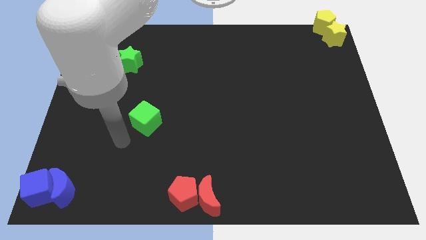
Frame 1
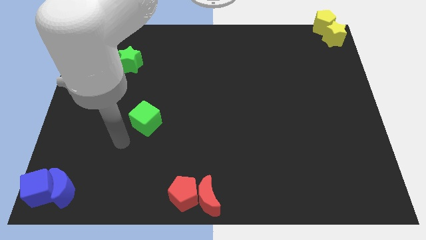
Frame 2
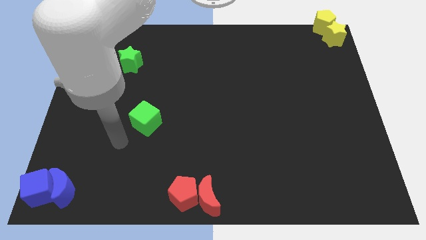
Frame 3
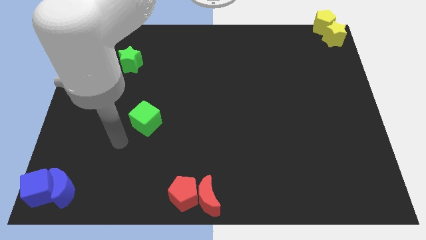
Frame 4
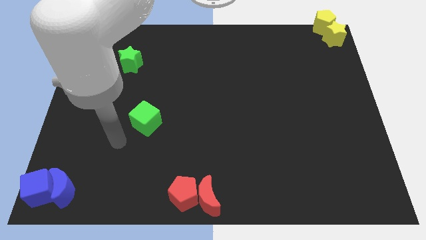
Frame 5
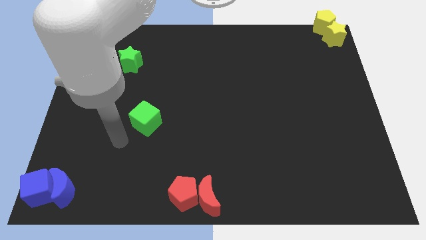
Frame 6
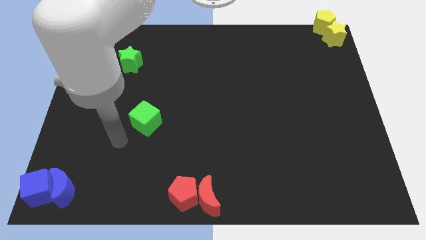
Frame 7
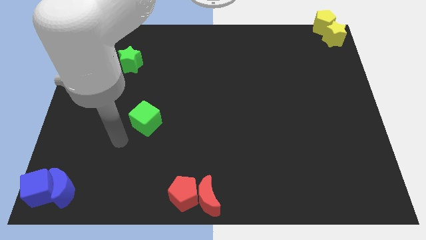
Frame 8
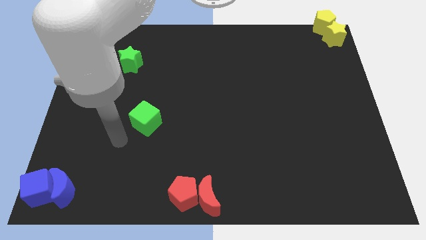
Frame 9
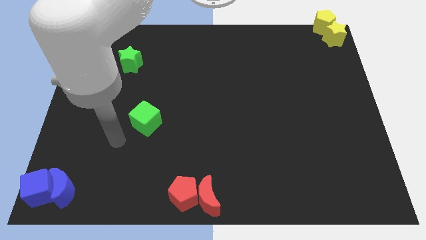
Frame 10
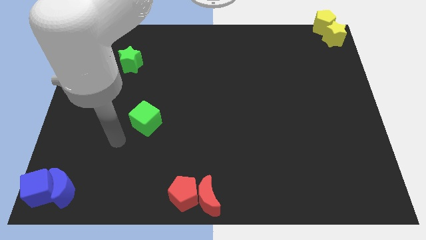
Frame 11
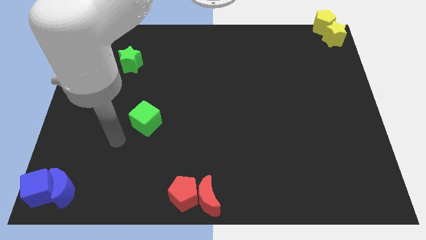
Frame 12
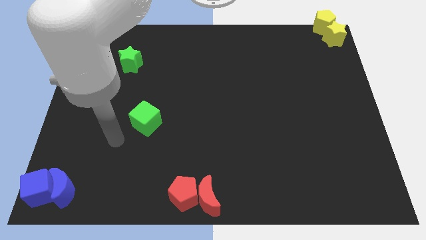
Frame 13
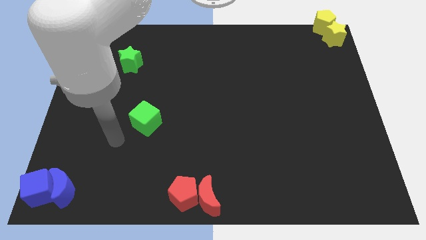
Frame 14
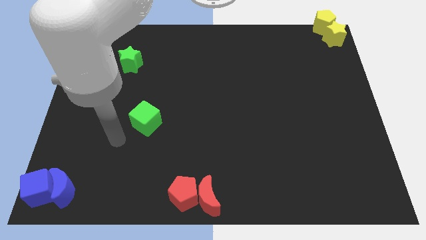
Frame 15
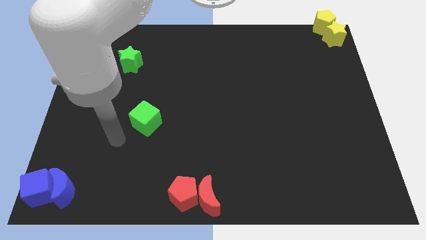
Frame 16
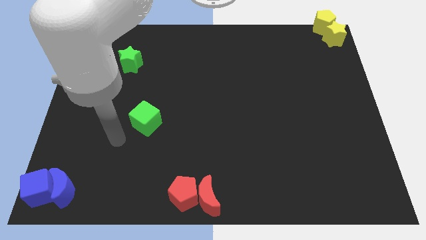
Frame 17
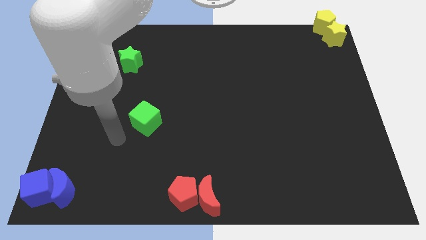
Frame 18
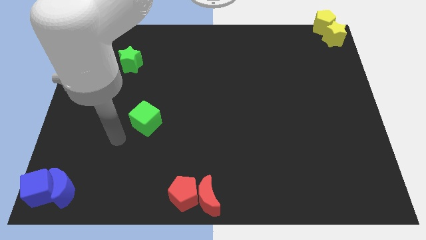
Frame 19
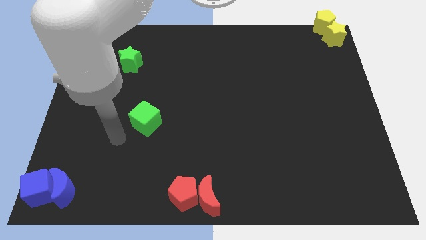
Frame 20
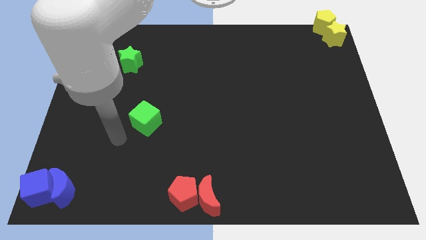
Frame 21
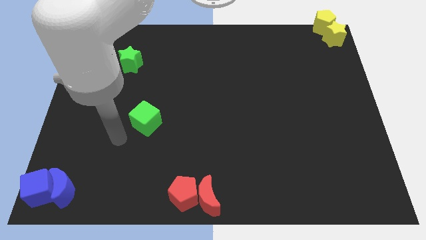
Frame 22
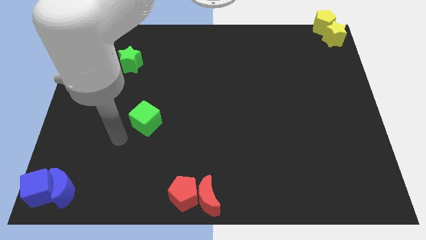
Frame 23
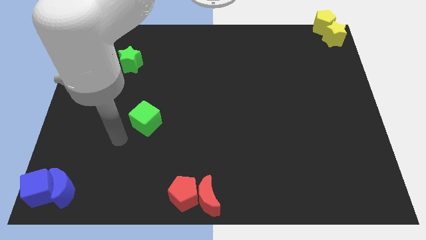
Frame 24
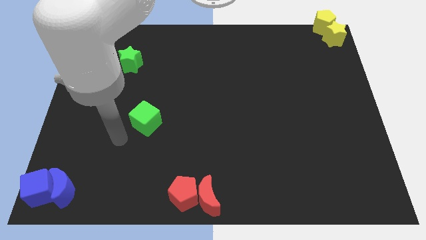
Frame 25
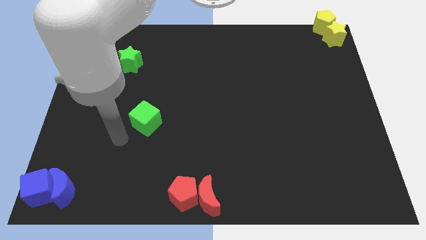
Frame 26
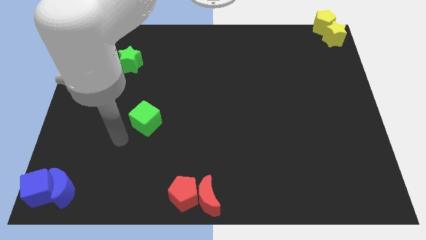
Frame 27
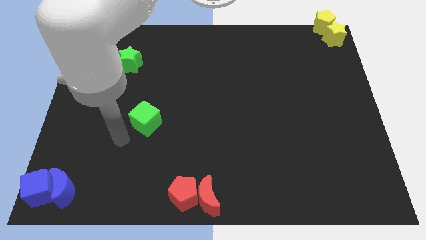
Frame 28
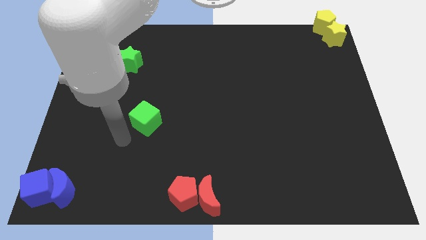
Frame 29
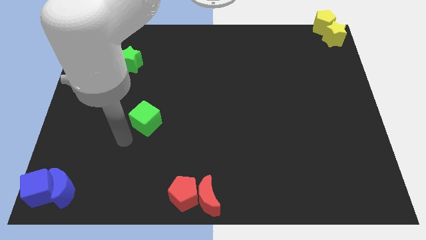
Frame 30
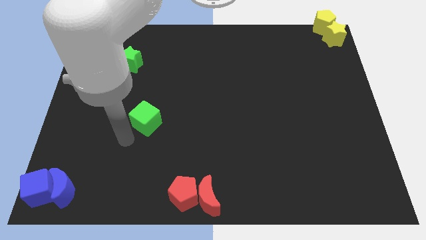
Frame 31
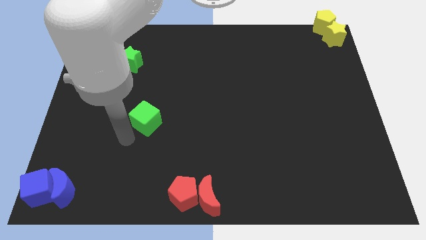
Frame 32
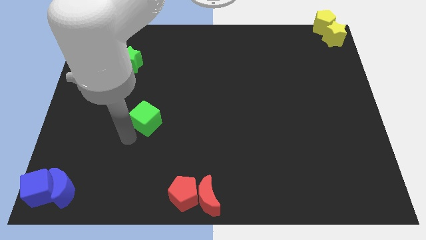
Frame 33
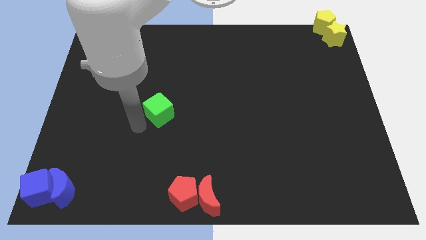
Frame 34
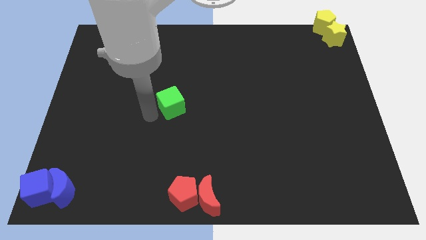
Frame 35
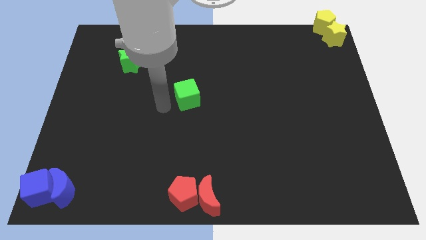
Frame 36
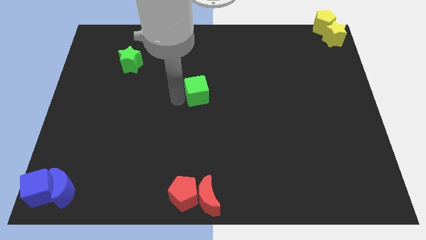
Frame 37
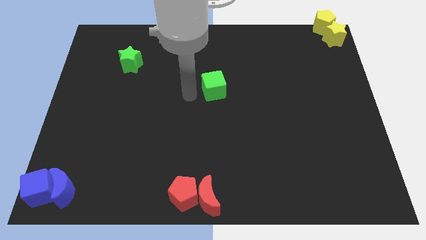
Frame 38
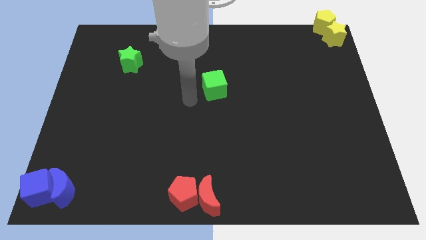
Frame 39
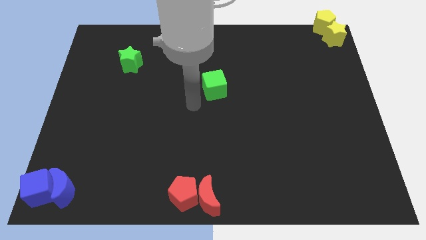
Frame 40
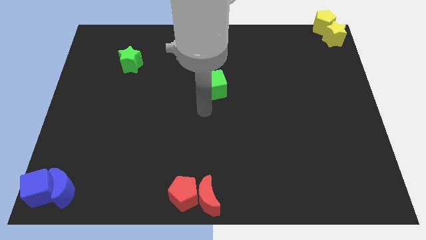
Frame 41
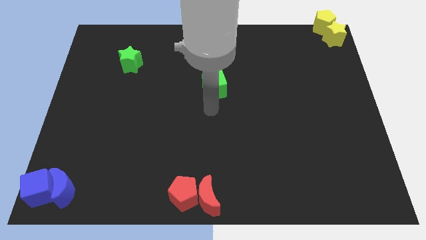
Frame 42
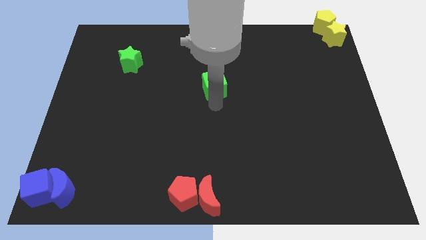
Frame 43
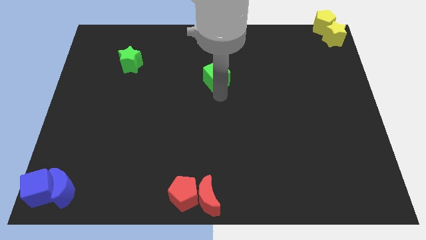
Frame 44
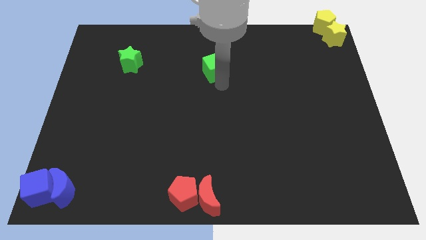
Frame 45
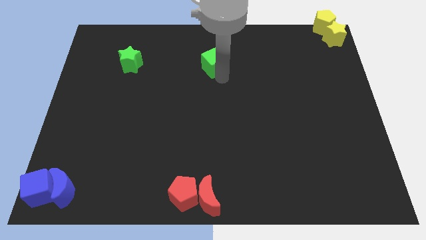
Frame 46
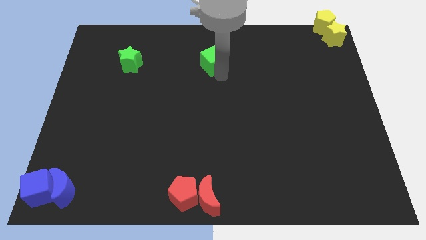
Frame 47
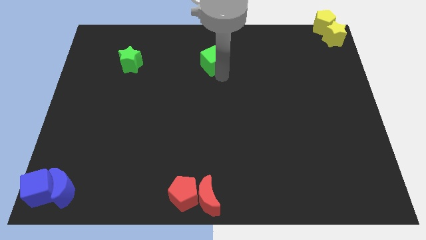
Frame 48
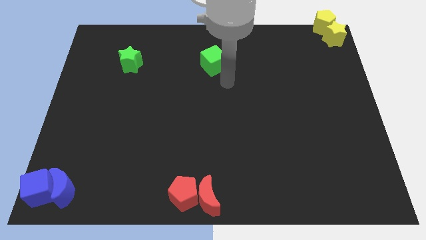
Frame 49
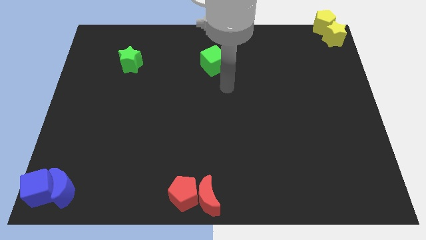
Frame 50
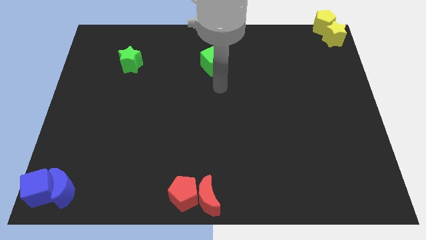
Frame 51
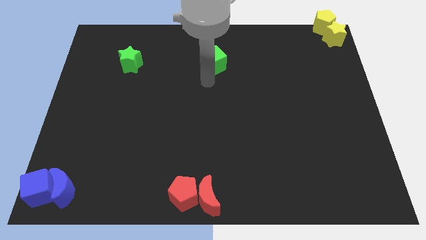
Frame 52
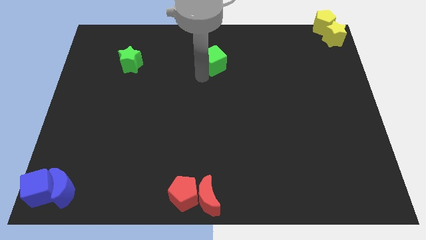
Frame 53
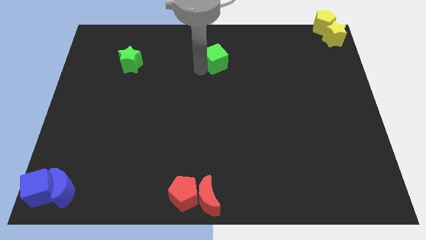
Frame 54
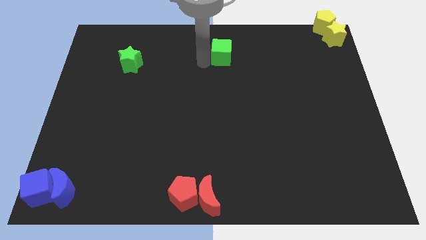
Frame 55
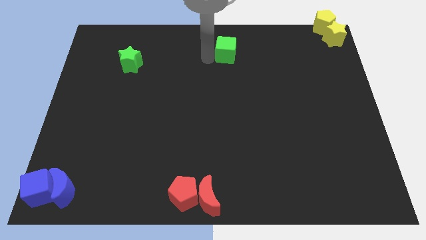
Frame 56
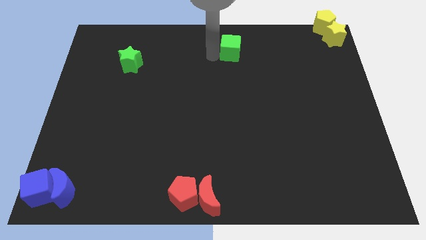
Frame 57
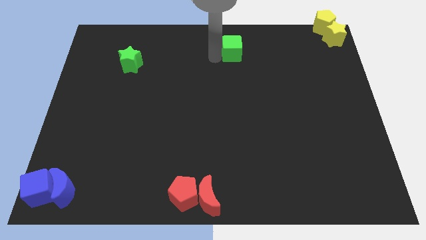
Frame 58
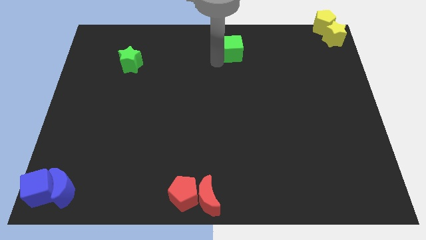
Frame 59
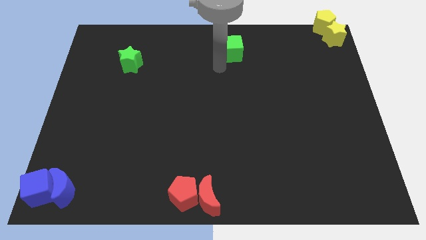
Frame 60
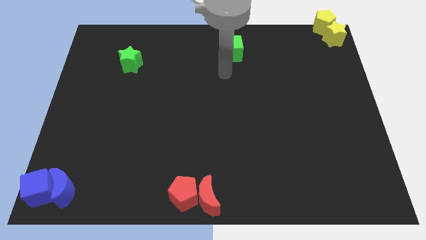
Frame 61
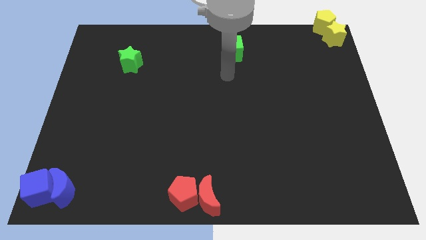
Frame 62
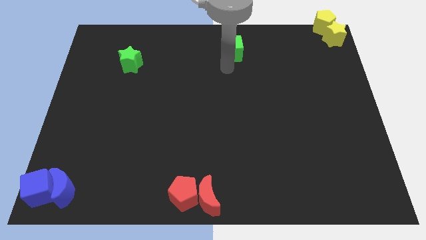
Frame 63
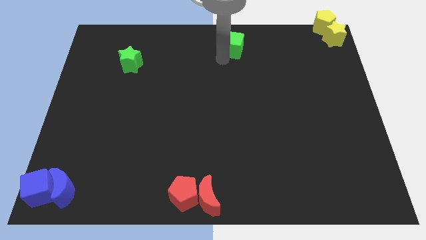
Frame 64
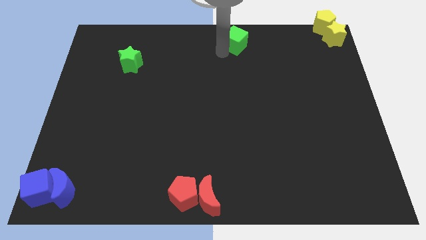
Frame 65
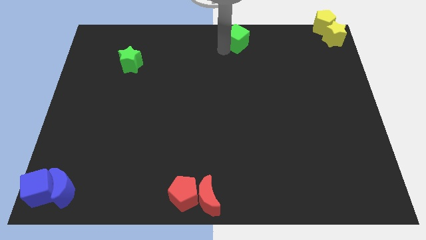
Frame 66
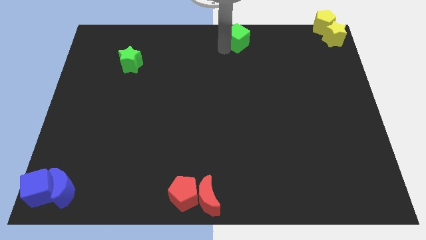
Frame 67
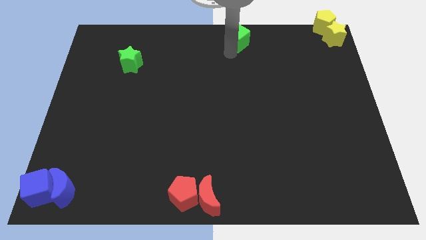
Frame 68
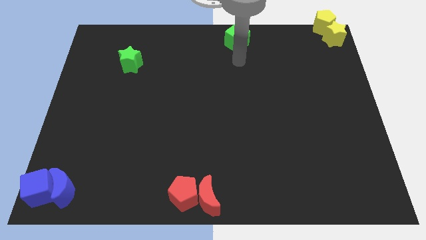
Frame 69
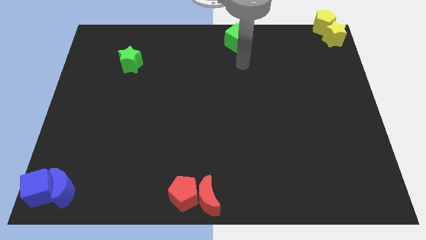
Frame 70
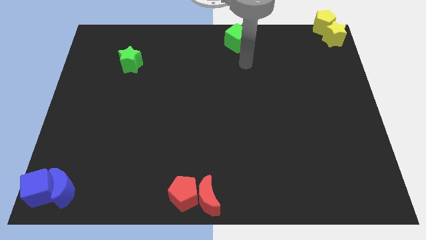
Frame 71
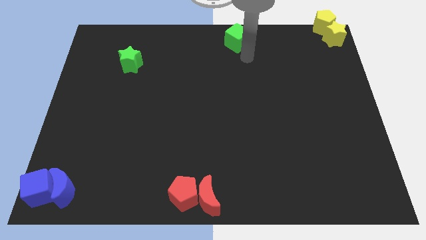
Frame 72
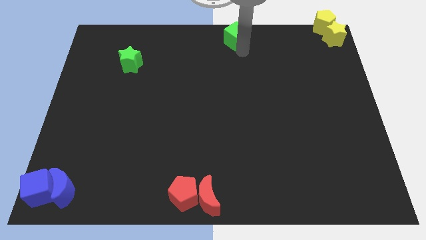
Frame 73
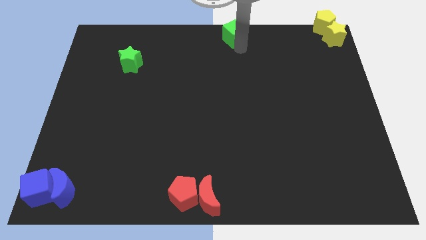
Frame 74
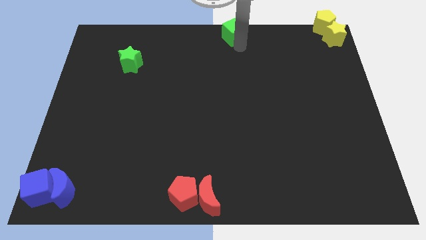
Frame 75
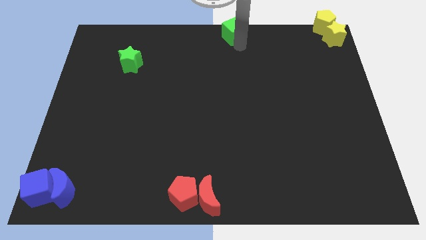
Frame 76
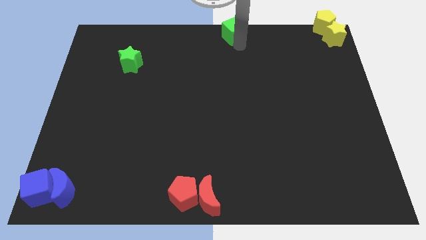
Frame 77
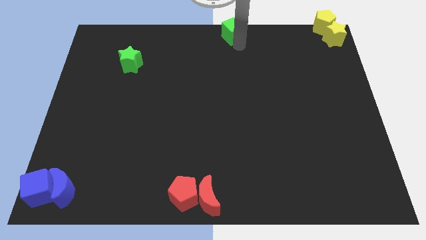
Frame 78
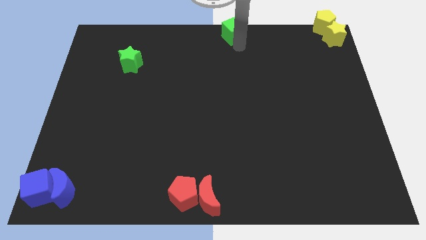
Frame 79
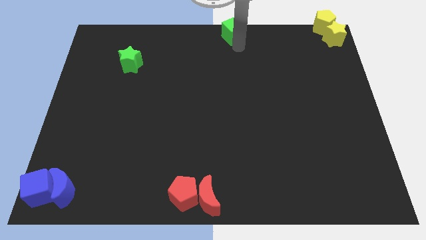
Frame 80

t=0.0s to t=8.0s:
drag the green cube to the top side of the table

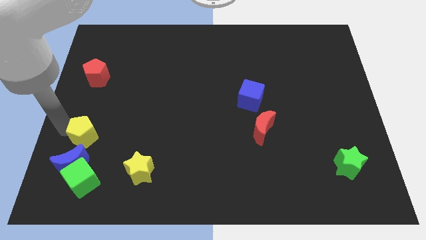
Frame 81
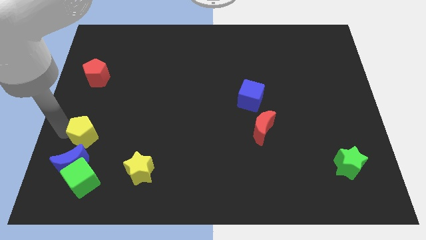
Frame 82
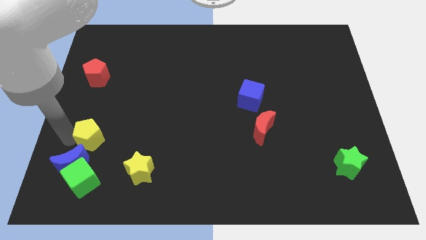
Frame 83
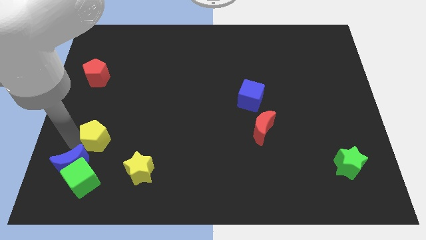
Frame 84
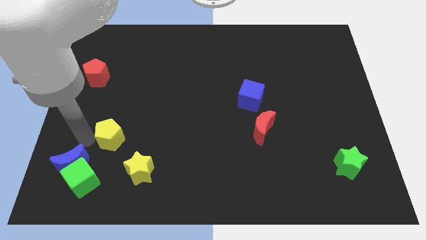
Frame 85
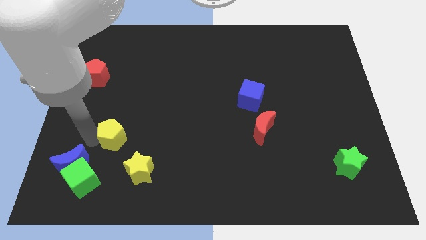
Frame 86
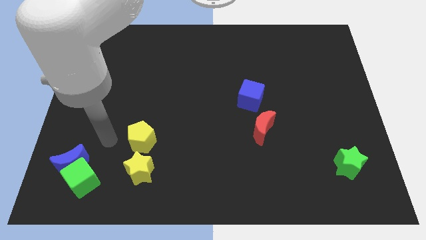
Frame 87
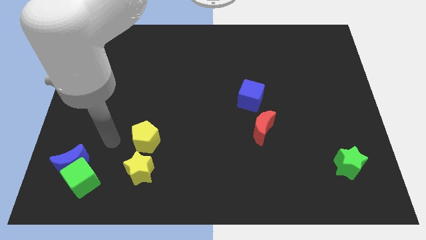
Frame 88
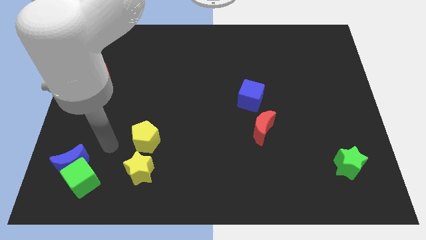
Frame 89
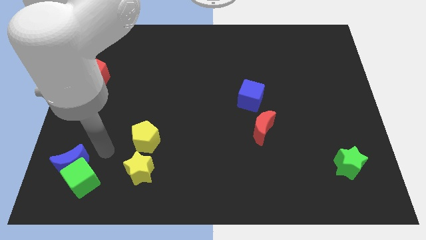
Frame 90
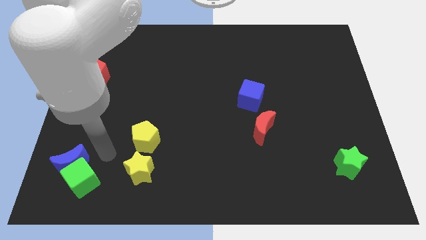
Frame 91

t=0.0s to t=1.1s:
push the yellow pentagon towards the center of the board

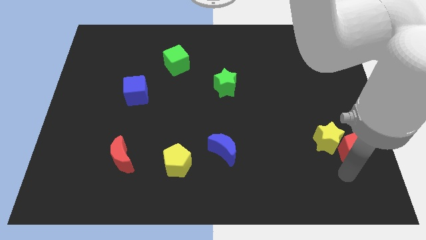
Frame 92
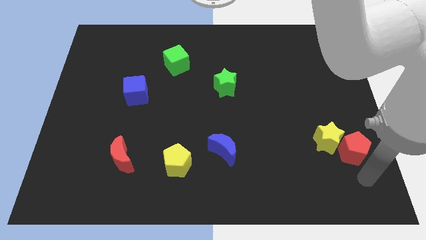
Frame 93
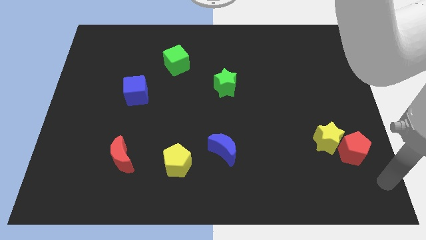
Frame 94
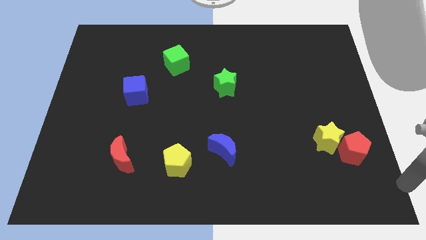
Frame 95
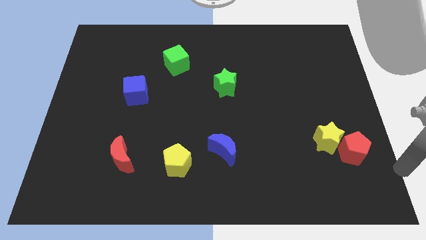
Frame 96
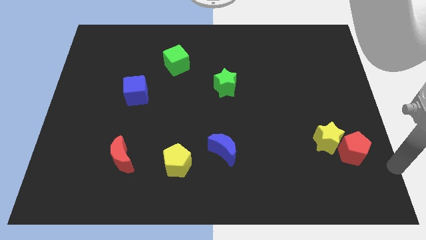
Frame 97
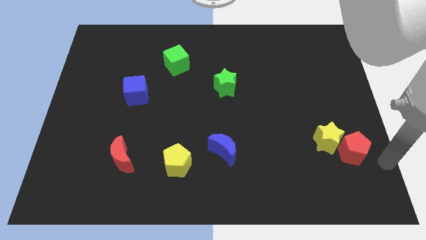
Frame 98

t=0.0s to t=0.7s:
move the arm to the bottom right side of the red pentagon
